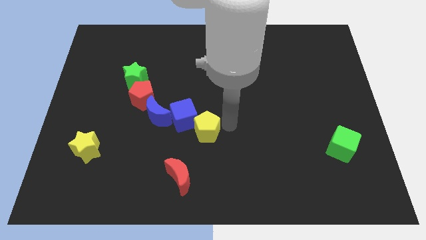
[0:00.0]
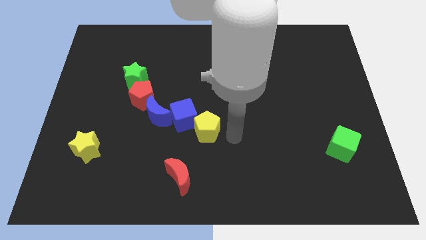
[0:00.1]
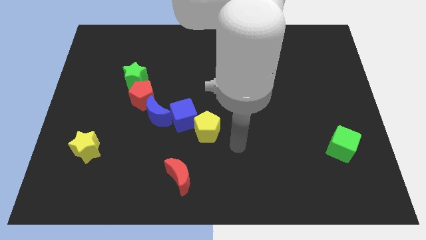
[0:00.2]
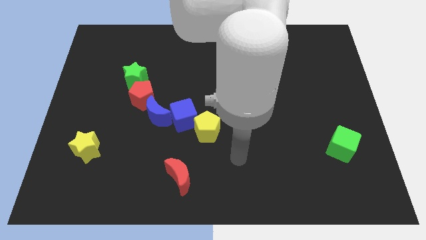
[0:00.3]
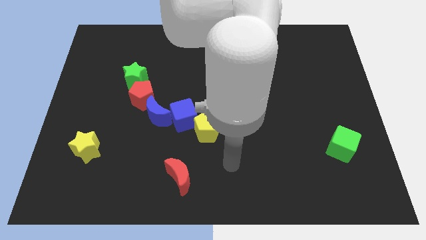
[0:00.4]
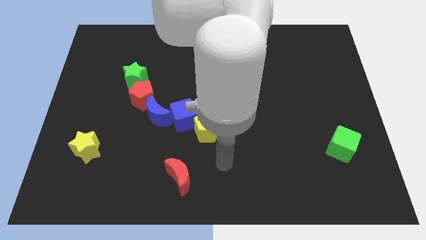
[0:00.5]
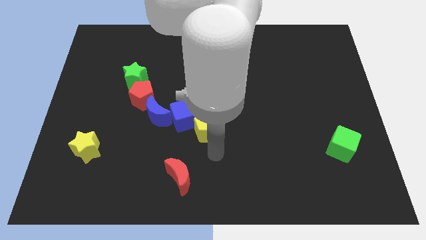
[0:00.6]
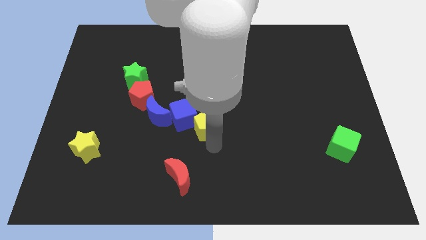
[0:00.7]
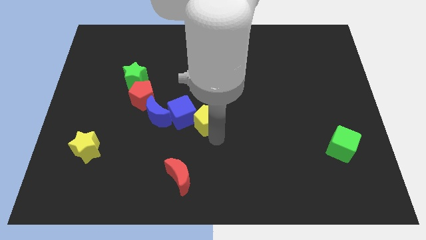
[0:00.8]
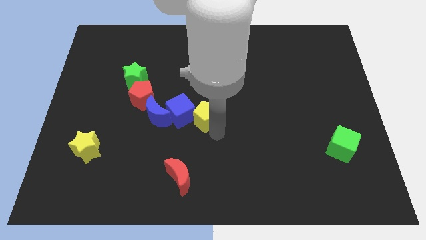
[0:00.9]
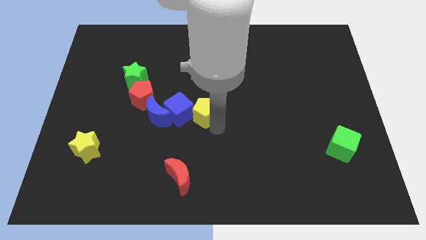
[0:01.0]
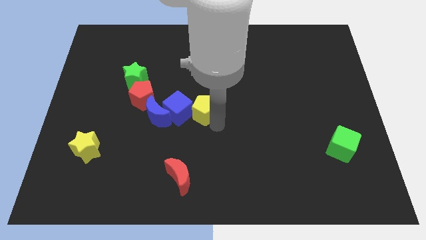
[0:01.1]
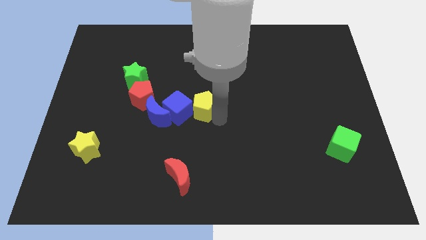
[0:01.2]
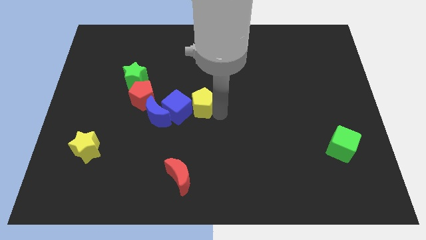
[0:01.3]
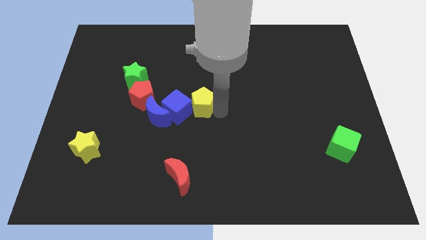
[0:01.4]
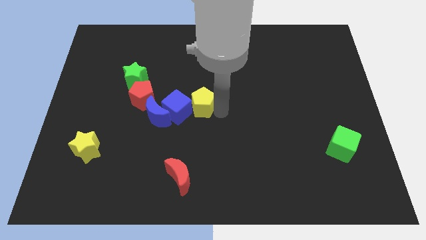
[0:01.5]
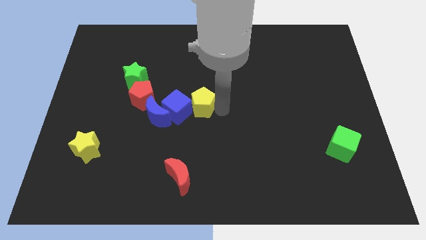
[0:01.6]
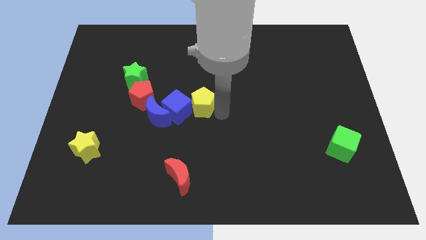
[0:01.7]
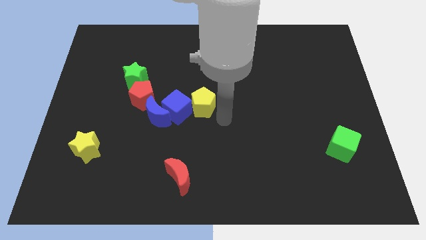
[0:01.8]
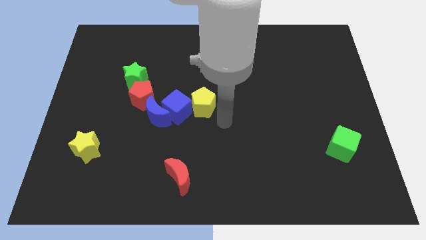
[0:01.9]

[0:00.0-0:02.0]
place the yellow pentagon to the right of blue cube

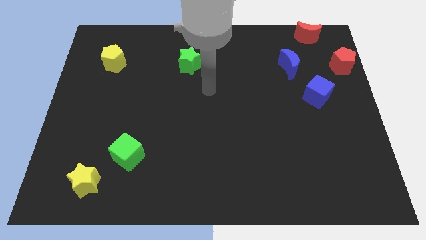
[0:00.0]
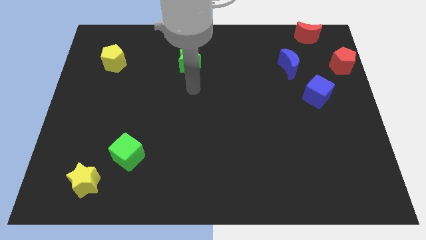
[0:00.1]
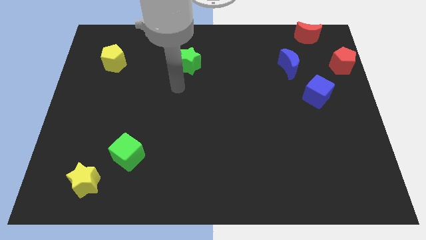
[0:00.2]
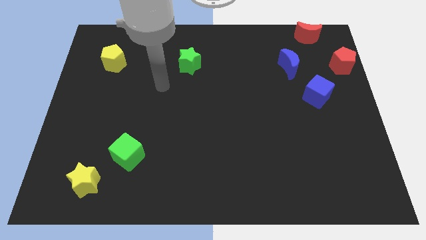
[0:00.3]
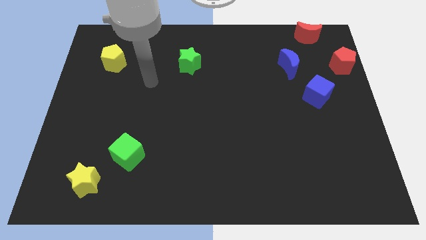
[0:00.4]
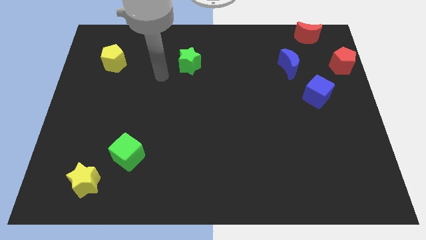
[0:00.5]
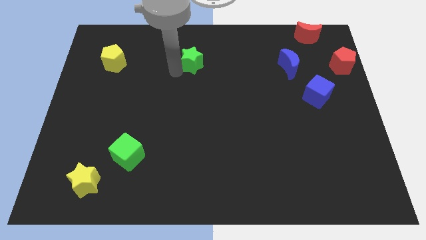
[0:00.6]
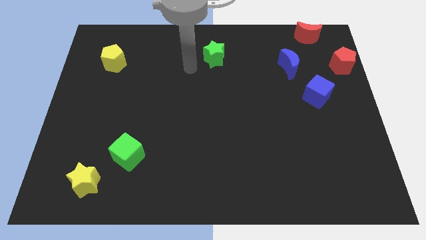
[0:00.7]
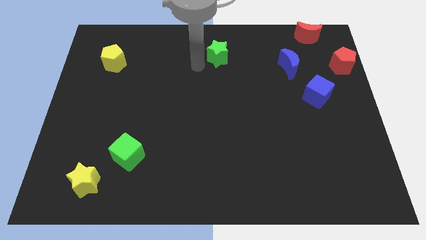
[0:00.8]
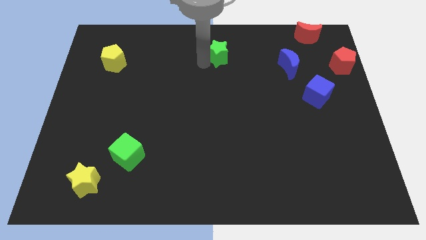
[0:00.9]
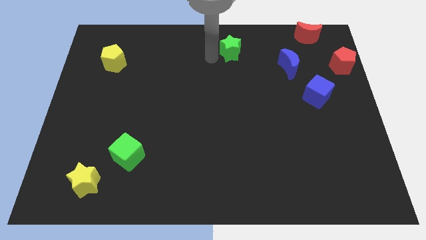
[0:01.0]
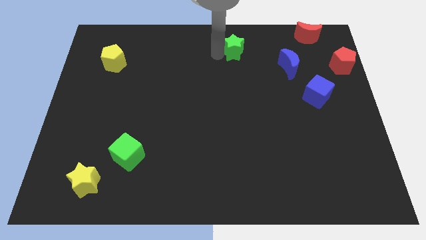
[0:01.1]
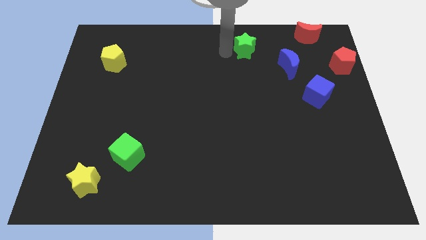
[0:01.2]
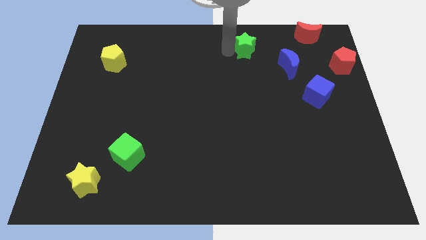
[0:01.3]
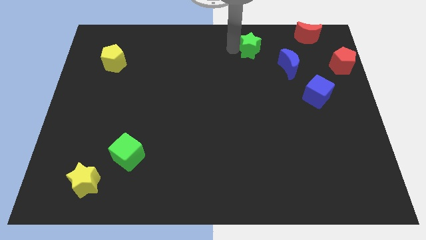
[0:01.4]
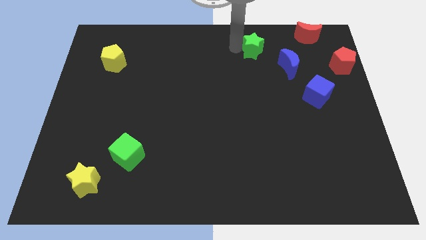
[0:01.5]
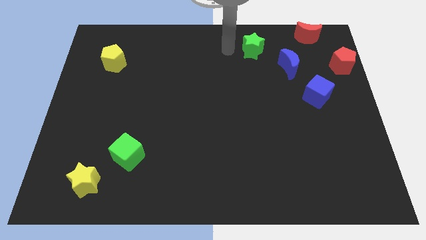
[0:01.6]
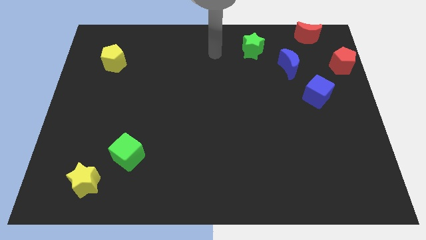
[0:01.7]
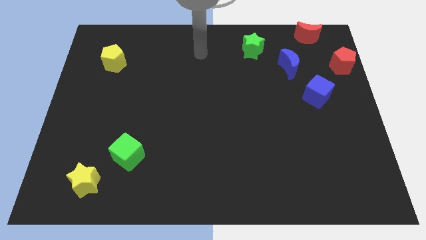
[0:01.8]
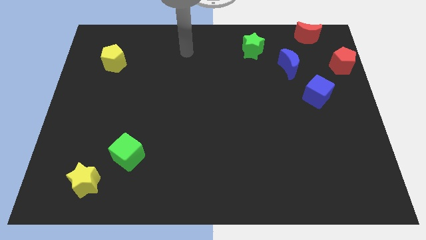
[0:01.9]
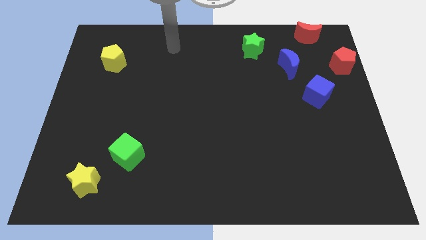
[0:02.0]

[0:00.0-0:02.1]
slide the green star to the top left side of the blue moon

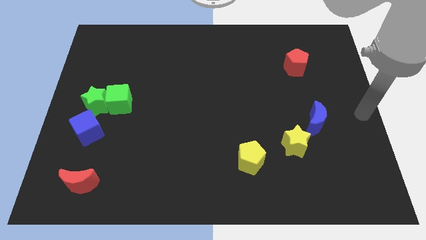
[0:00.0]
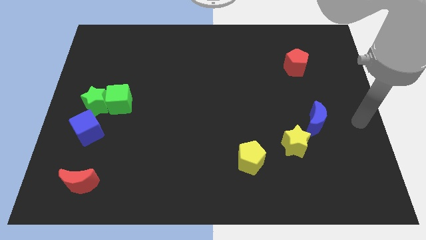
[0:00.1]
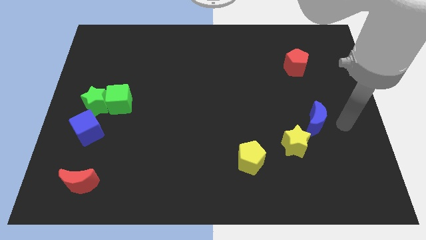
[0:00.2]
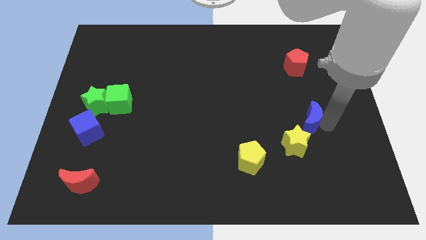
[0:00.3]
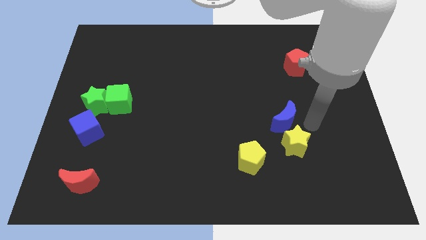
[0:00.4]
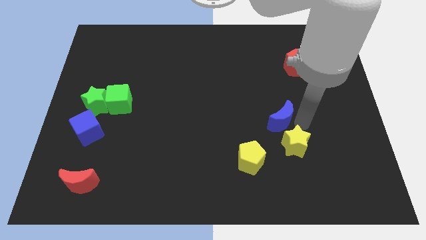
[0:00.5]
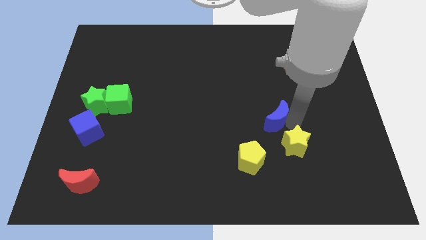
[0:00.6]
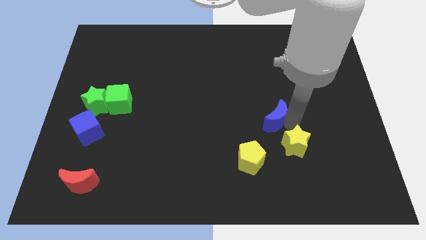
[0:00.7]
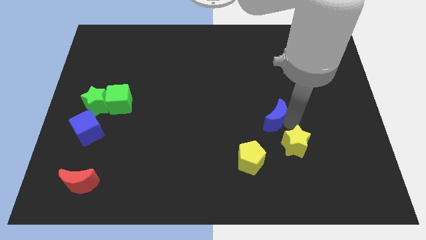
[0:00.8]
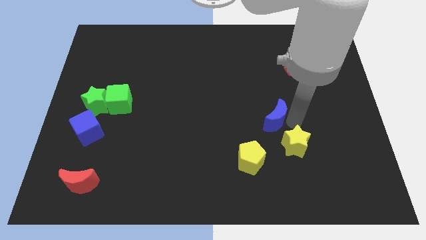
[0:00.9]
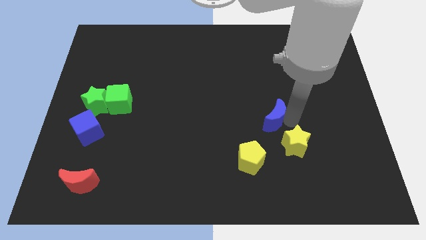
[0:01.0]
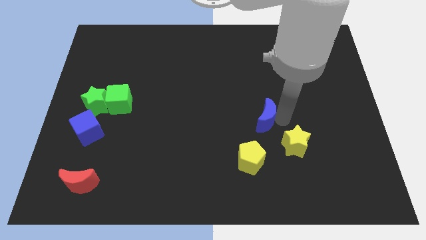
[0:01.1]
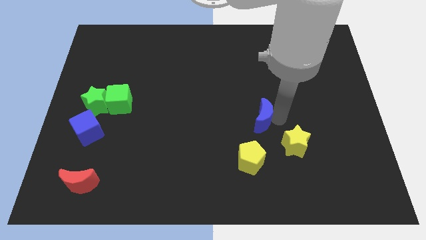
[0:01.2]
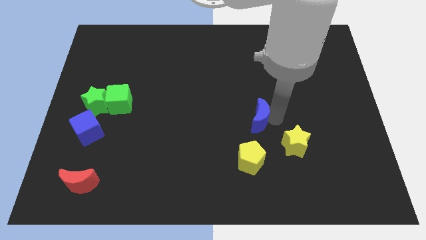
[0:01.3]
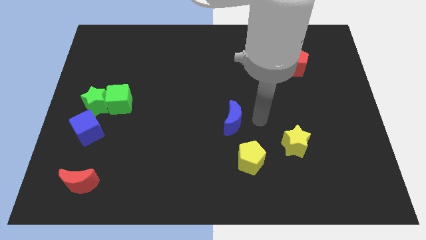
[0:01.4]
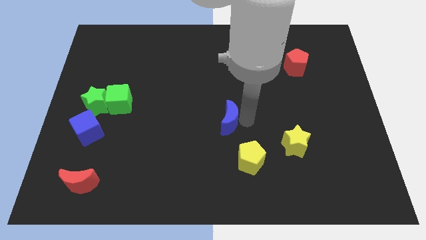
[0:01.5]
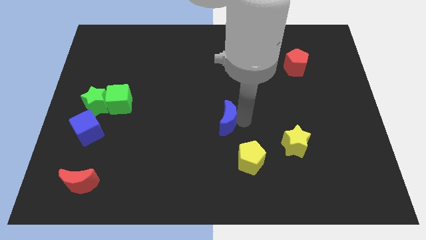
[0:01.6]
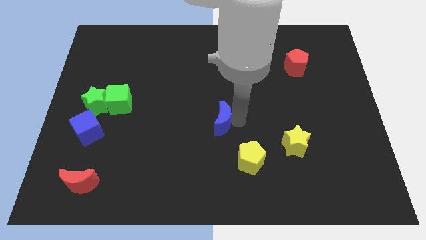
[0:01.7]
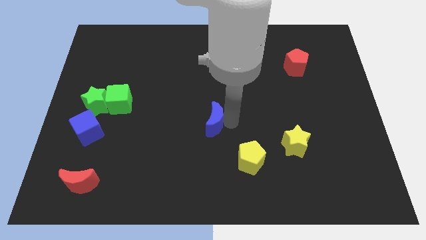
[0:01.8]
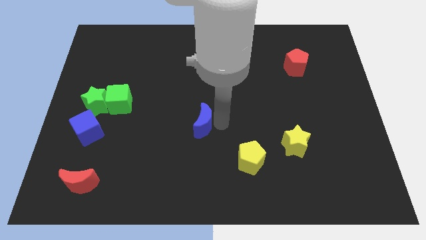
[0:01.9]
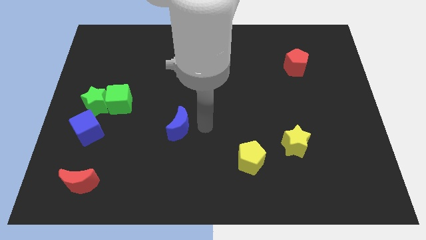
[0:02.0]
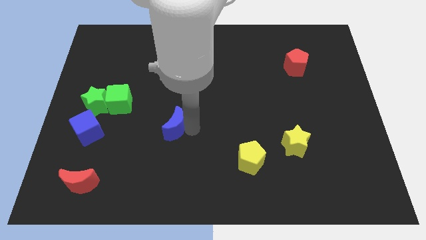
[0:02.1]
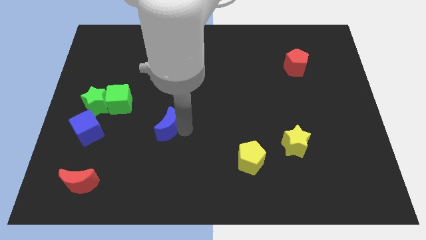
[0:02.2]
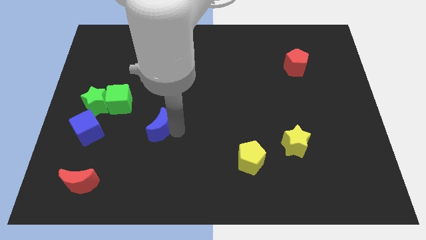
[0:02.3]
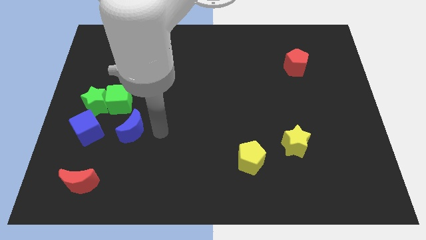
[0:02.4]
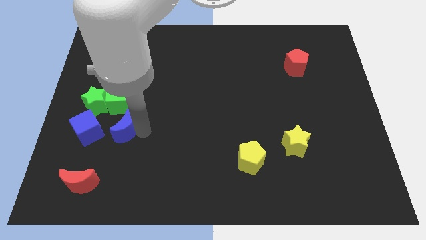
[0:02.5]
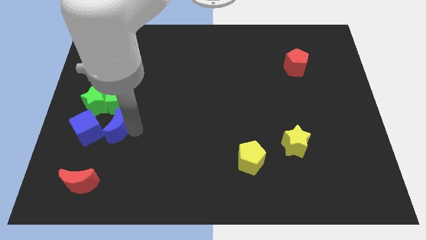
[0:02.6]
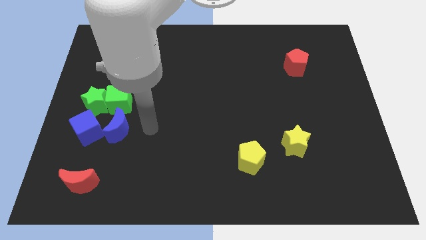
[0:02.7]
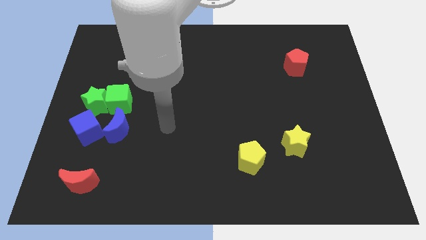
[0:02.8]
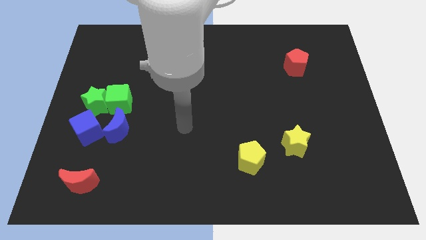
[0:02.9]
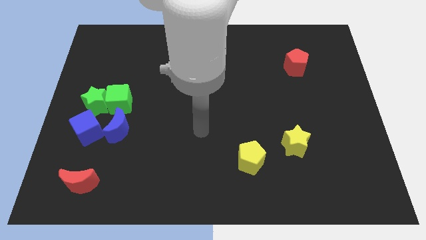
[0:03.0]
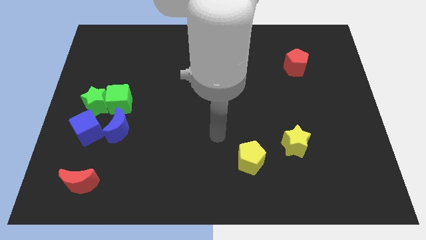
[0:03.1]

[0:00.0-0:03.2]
put the blue moon at the right side of the blue cube

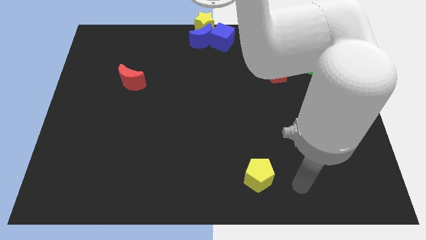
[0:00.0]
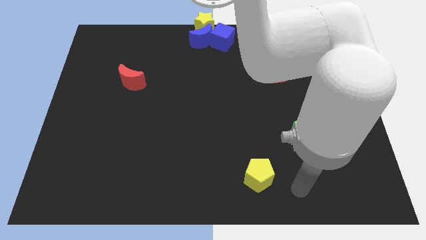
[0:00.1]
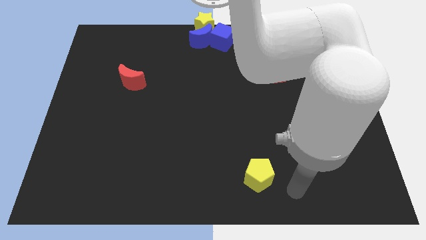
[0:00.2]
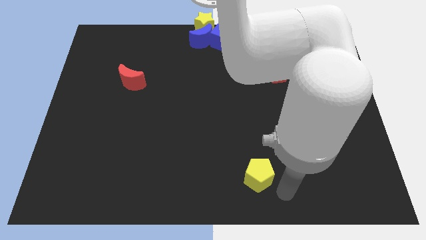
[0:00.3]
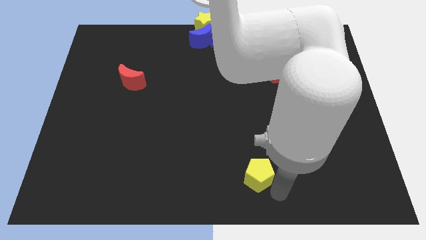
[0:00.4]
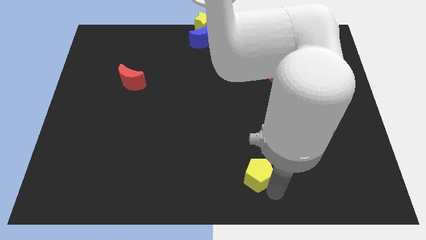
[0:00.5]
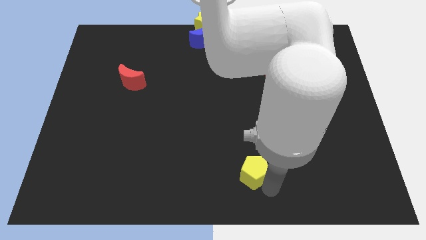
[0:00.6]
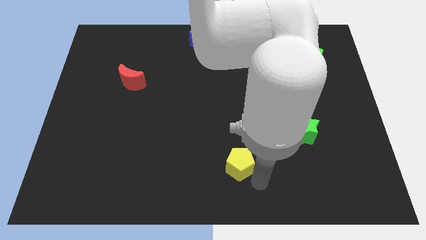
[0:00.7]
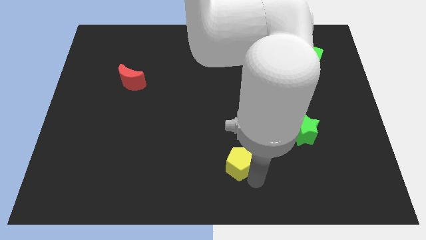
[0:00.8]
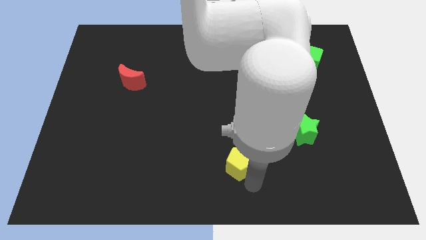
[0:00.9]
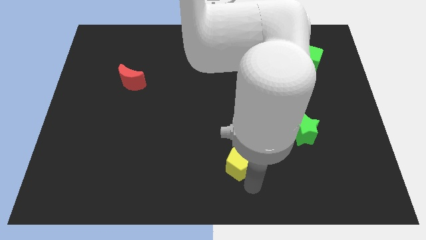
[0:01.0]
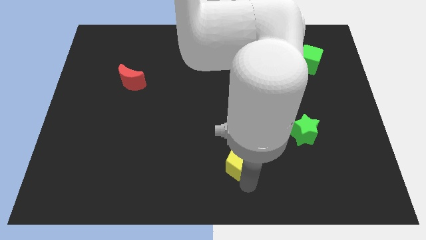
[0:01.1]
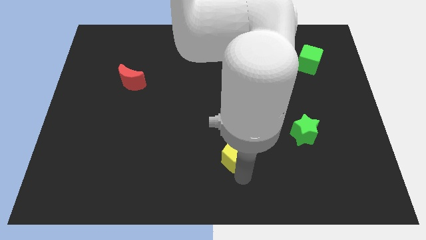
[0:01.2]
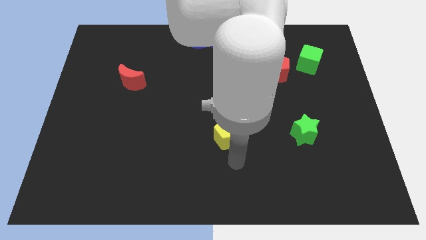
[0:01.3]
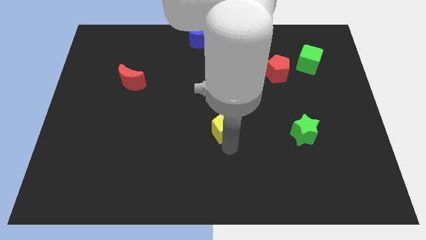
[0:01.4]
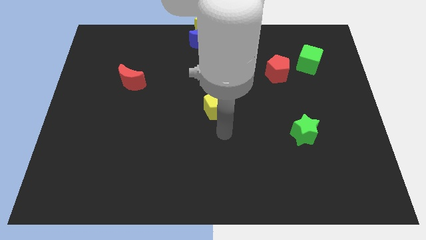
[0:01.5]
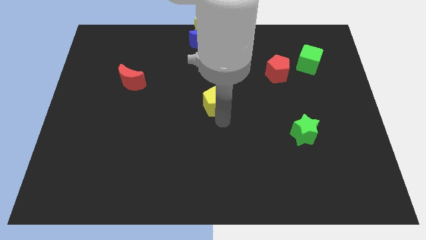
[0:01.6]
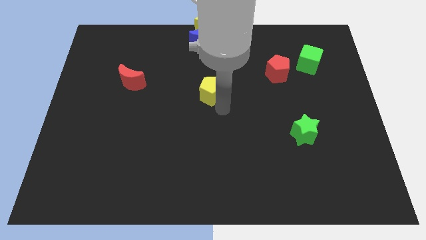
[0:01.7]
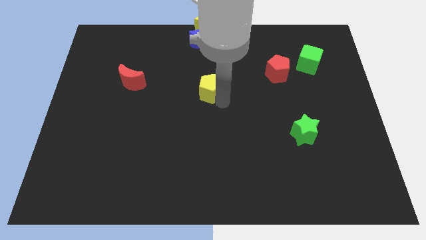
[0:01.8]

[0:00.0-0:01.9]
push the yellow pentagon to the center
